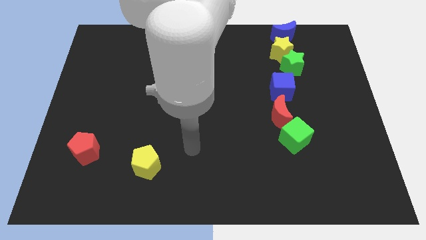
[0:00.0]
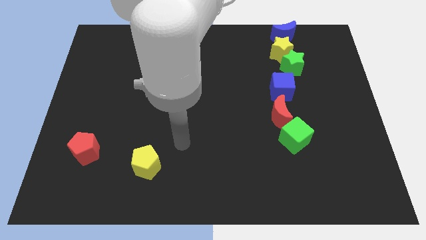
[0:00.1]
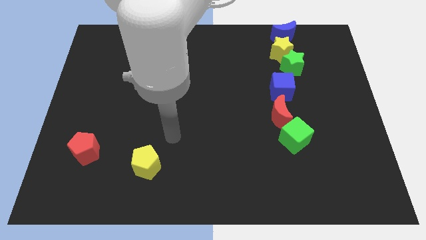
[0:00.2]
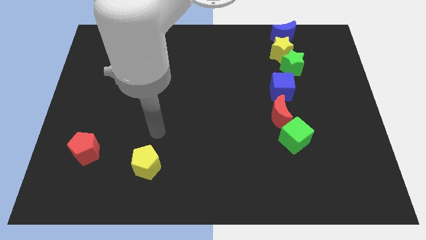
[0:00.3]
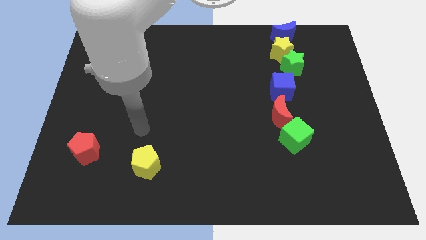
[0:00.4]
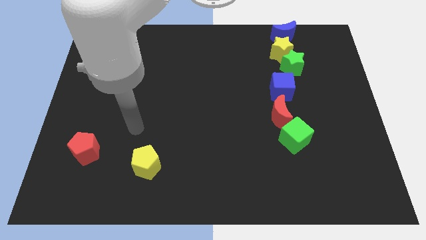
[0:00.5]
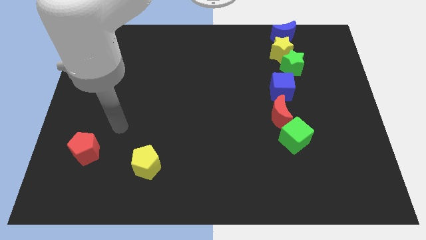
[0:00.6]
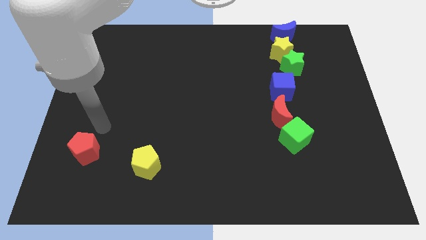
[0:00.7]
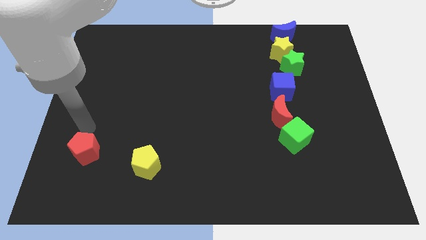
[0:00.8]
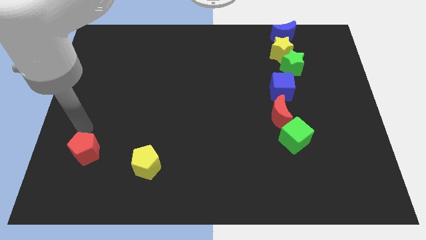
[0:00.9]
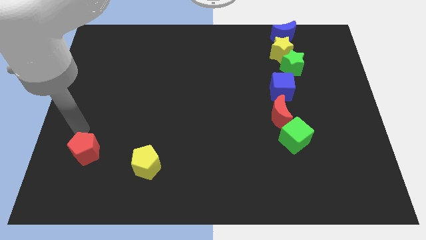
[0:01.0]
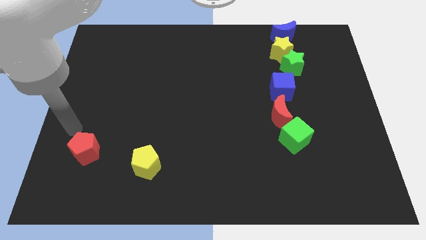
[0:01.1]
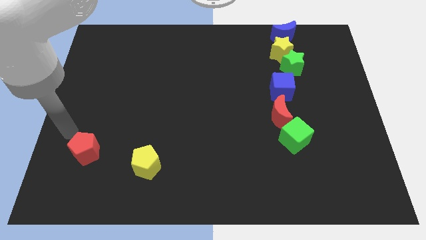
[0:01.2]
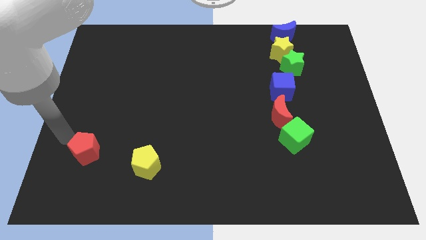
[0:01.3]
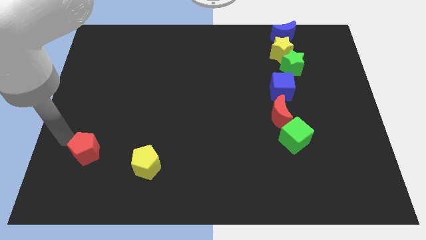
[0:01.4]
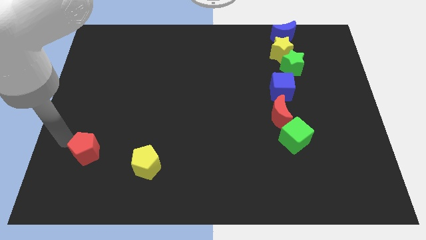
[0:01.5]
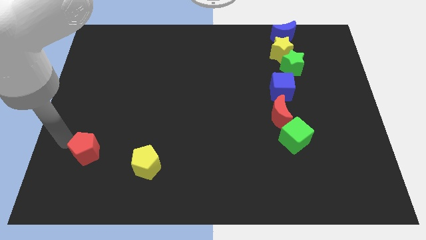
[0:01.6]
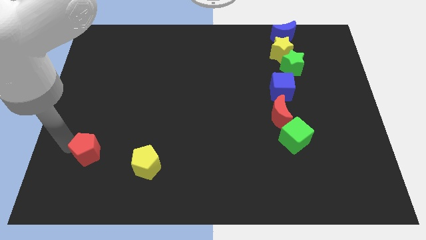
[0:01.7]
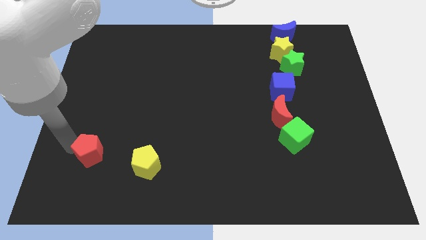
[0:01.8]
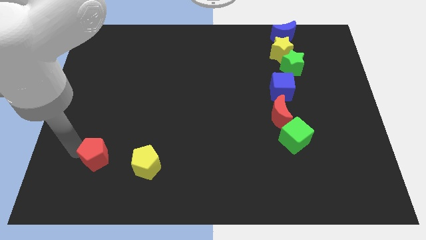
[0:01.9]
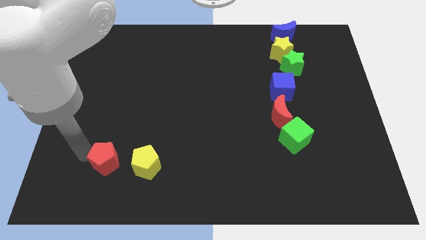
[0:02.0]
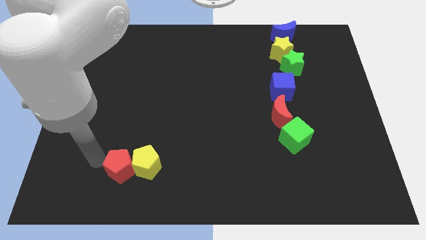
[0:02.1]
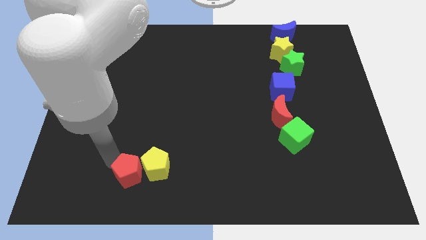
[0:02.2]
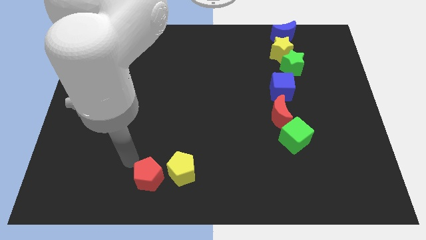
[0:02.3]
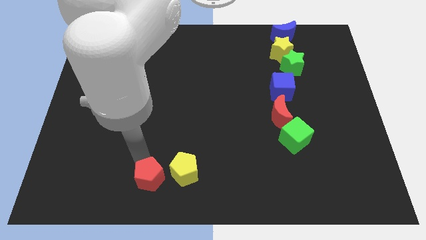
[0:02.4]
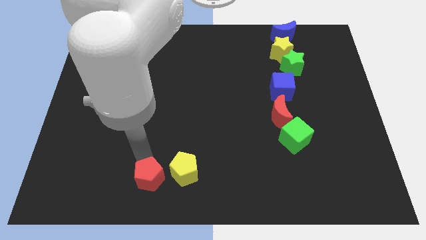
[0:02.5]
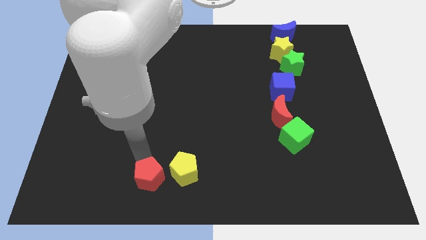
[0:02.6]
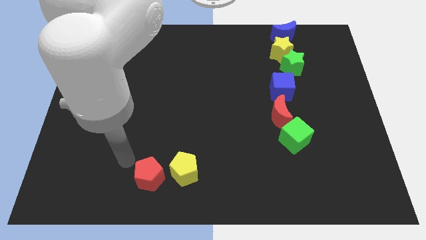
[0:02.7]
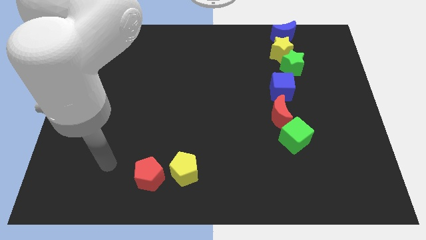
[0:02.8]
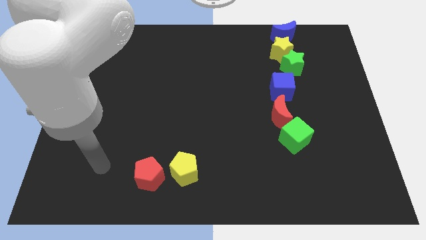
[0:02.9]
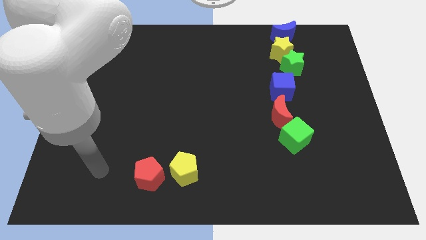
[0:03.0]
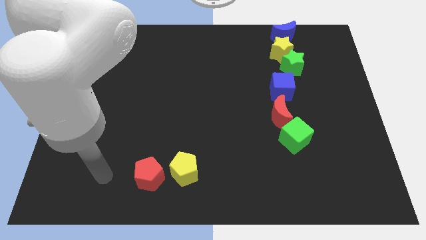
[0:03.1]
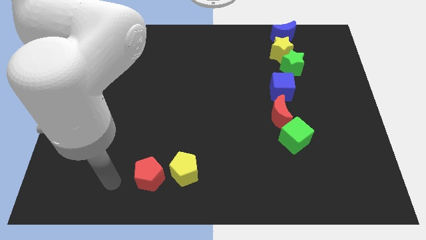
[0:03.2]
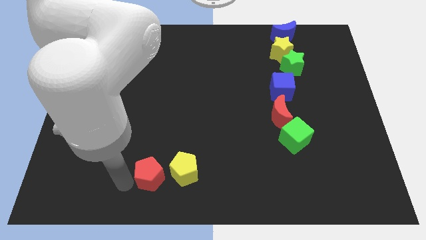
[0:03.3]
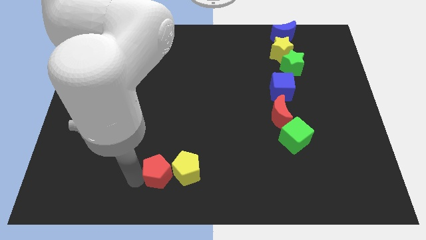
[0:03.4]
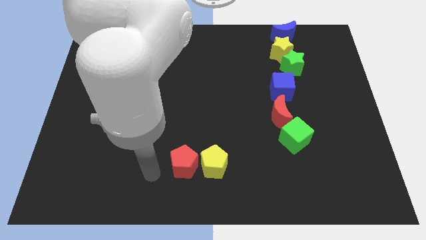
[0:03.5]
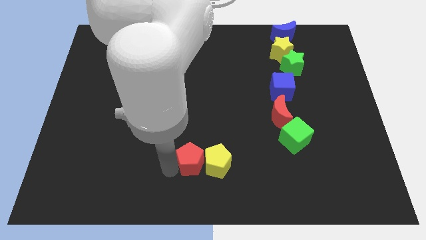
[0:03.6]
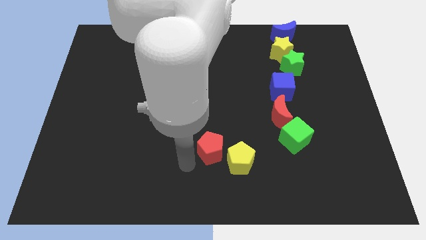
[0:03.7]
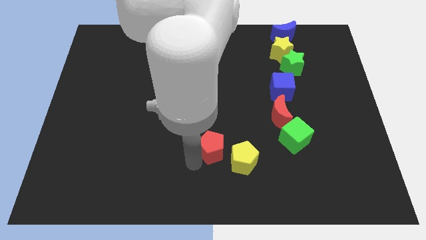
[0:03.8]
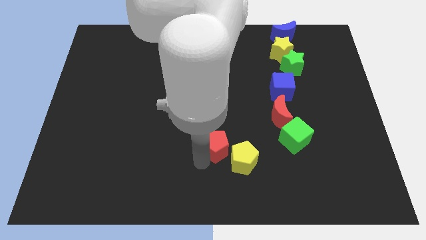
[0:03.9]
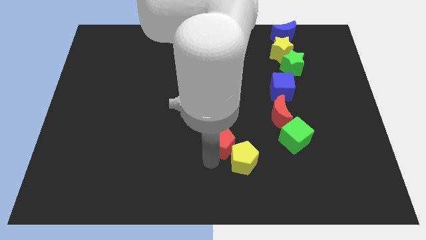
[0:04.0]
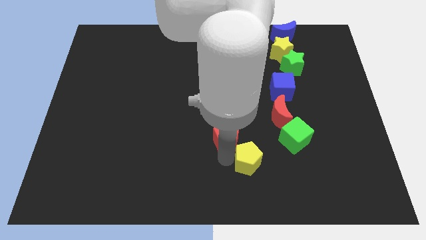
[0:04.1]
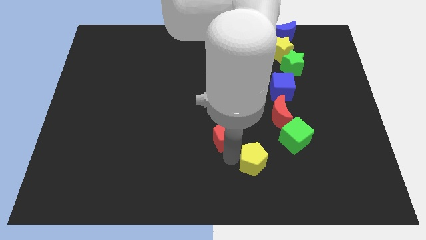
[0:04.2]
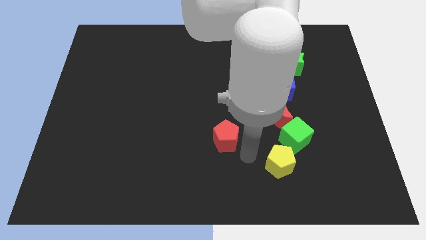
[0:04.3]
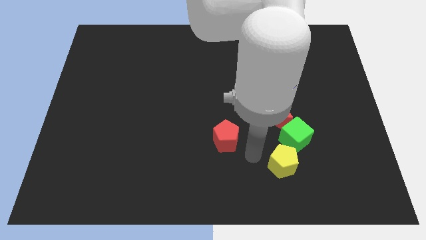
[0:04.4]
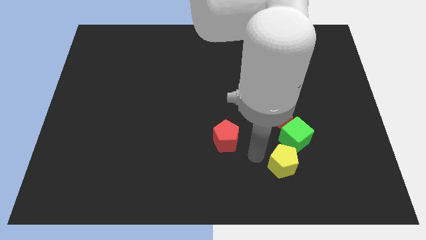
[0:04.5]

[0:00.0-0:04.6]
move pentagons to right side

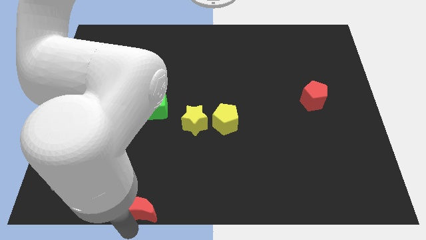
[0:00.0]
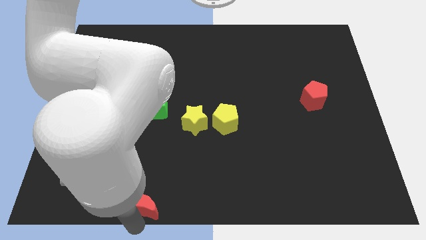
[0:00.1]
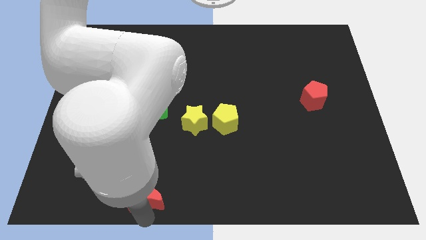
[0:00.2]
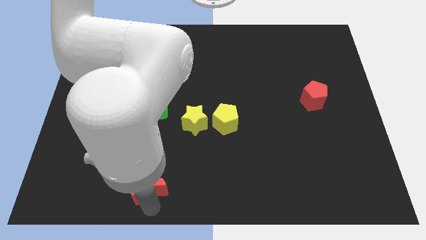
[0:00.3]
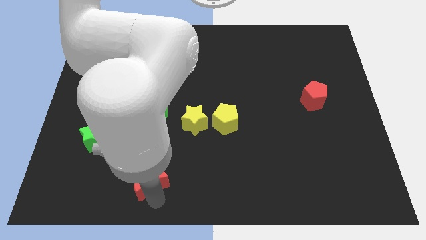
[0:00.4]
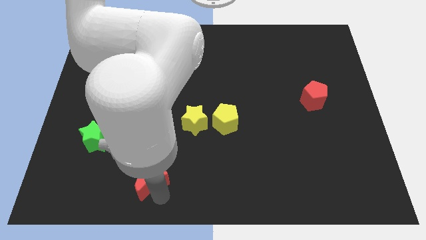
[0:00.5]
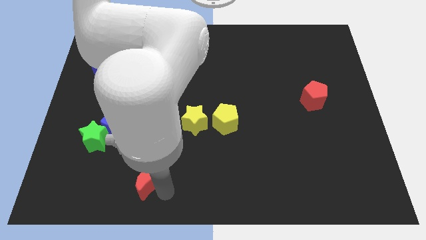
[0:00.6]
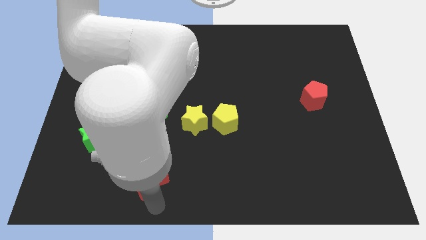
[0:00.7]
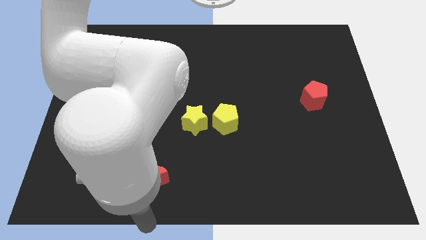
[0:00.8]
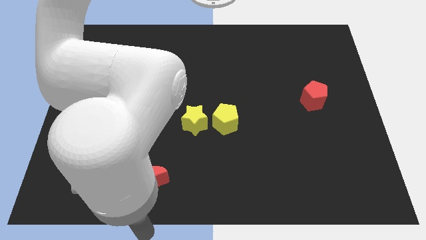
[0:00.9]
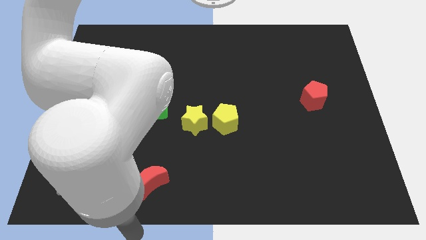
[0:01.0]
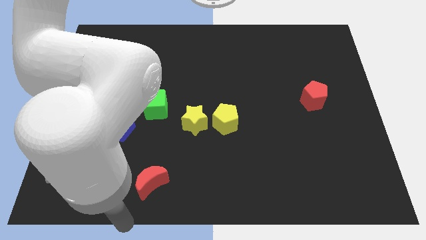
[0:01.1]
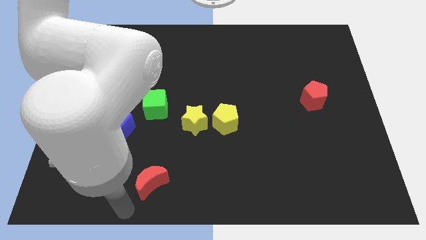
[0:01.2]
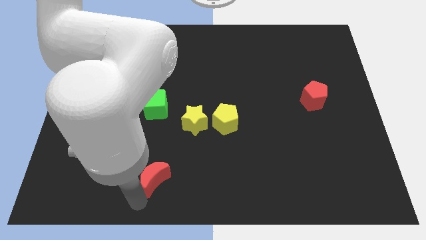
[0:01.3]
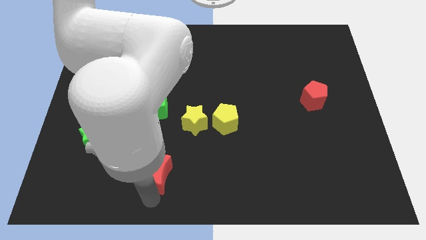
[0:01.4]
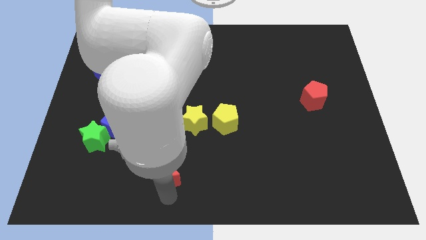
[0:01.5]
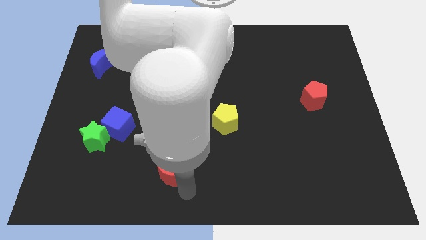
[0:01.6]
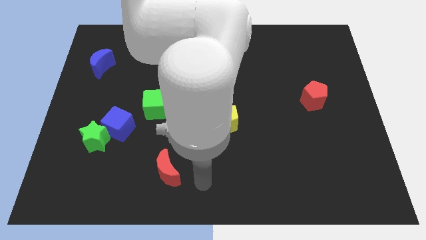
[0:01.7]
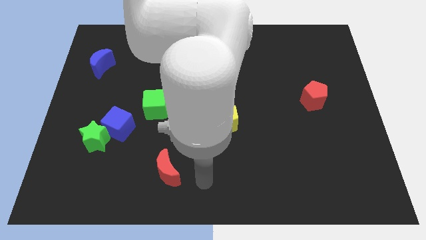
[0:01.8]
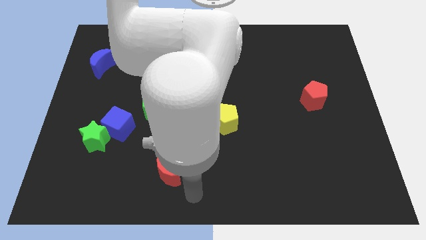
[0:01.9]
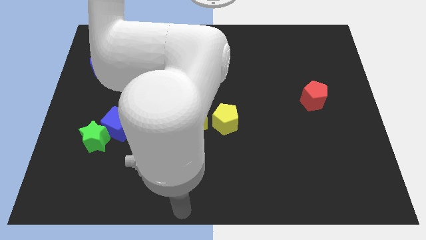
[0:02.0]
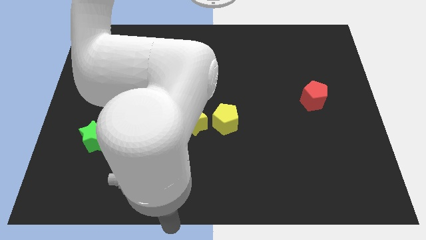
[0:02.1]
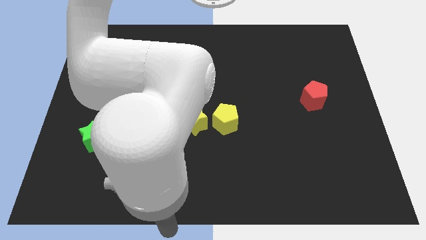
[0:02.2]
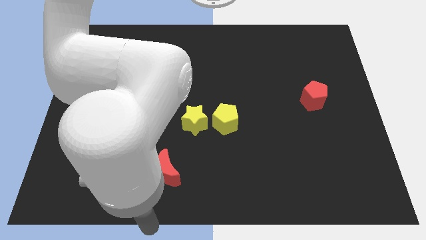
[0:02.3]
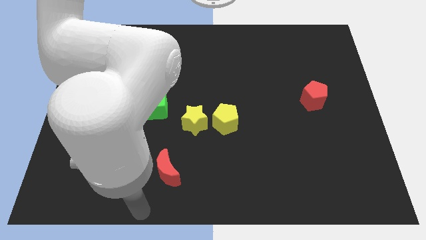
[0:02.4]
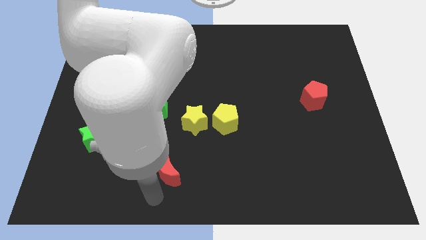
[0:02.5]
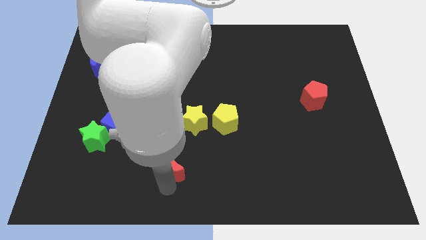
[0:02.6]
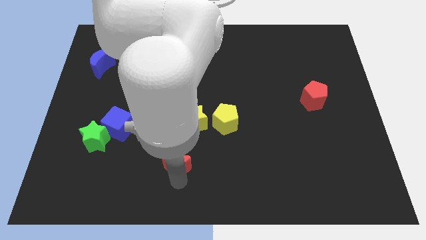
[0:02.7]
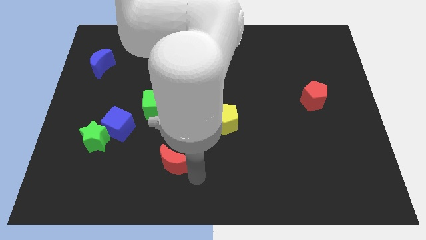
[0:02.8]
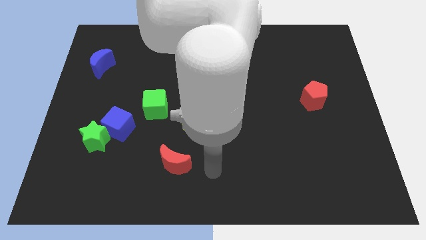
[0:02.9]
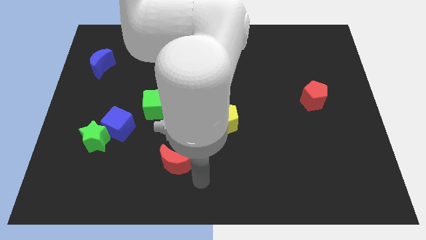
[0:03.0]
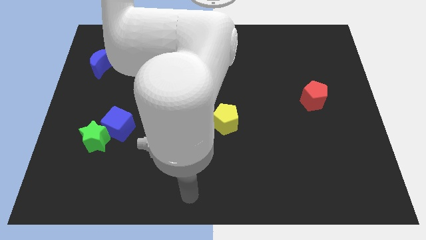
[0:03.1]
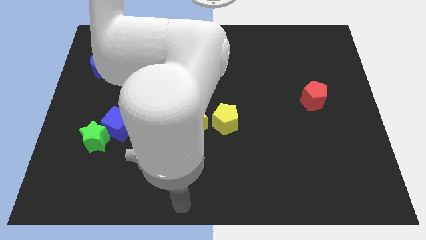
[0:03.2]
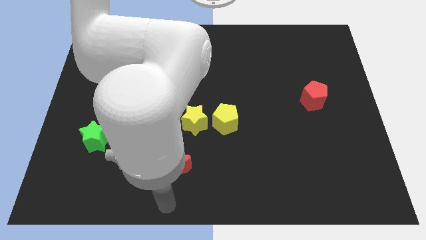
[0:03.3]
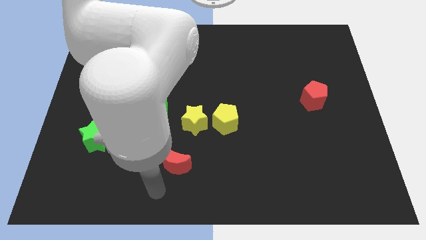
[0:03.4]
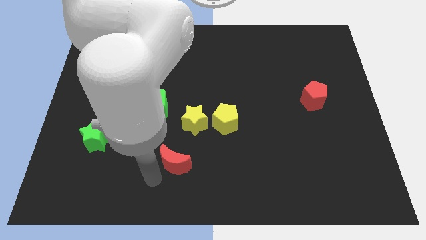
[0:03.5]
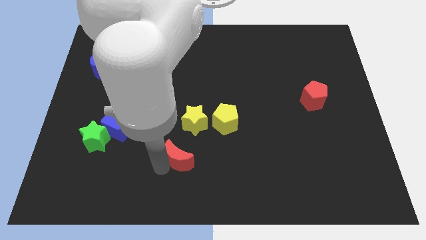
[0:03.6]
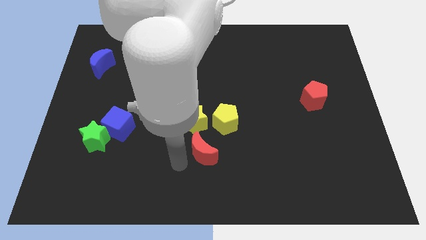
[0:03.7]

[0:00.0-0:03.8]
move the red crescent below the yellow star

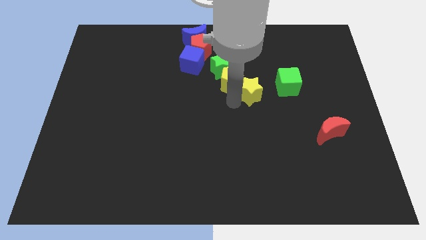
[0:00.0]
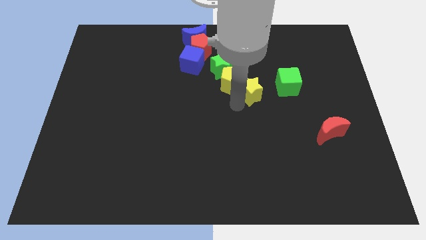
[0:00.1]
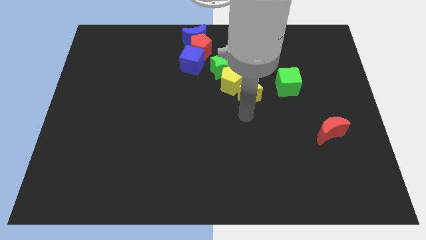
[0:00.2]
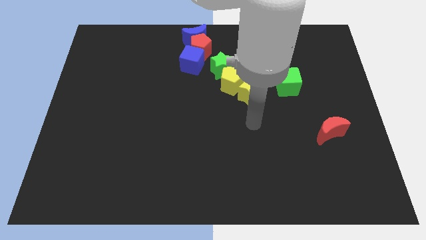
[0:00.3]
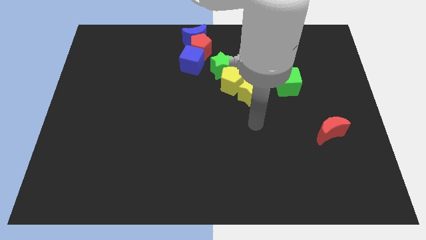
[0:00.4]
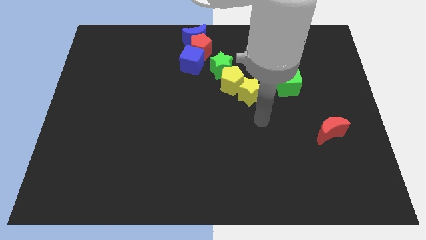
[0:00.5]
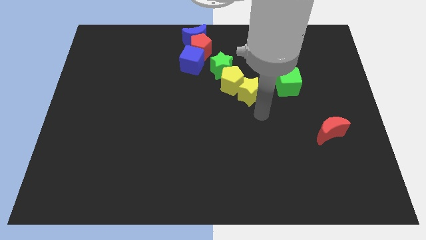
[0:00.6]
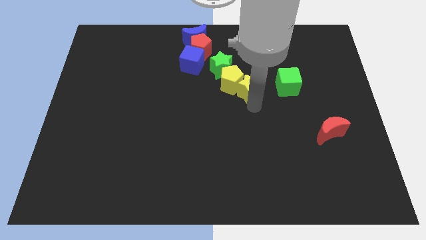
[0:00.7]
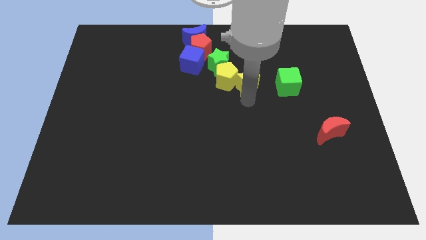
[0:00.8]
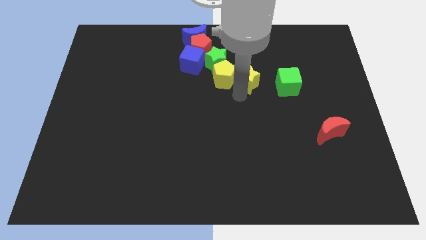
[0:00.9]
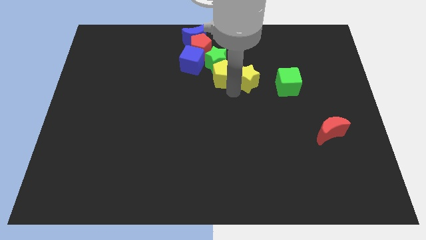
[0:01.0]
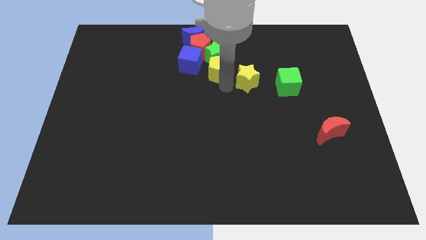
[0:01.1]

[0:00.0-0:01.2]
put the yellow star in between the yellow pentagon and green cube
